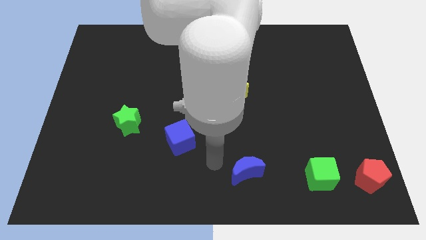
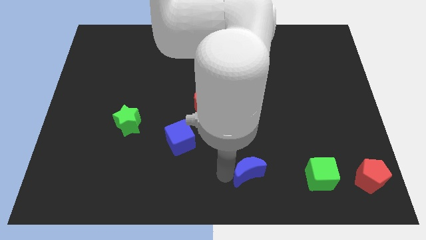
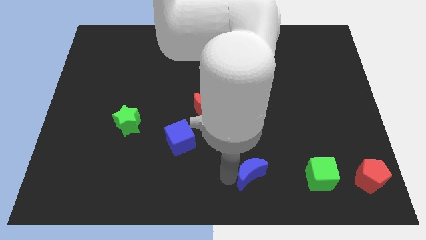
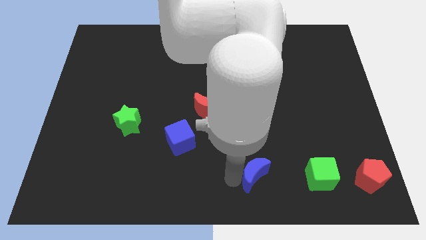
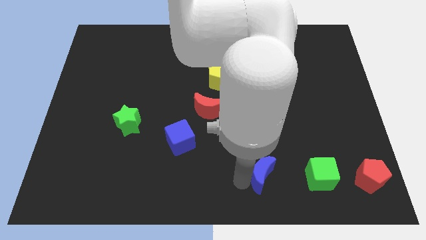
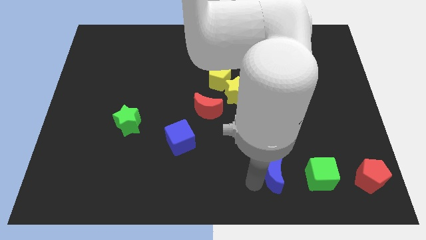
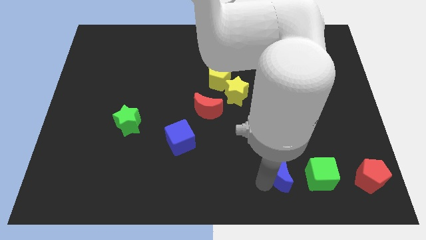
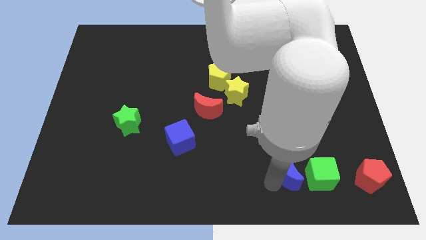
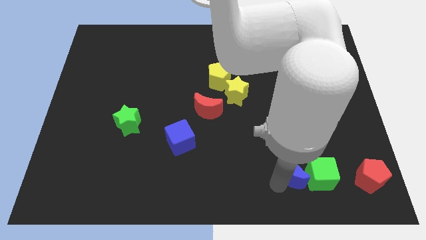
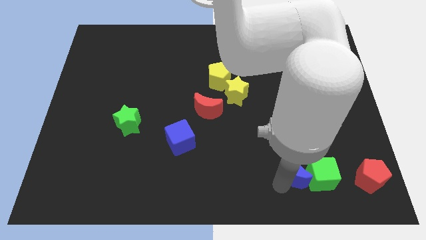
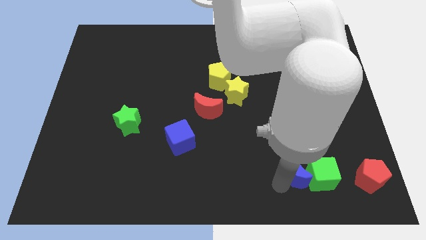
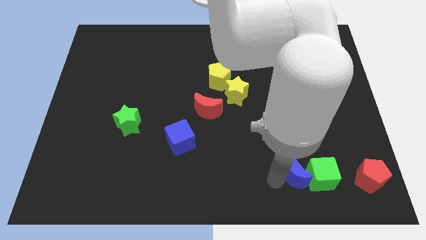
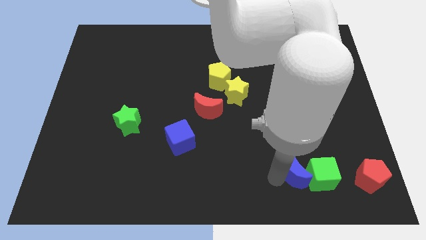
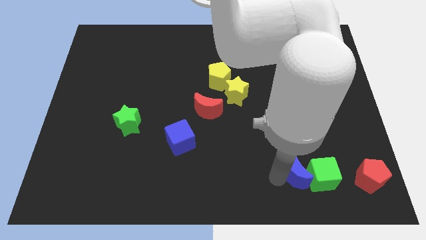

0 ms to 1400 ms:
push the blue moon into the green cube

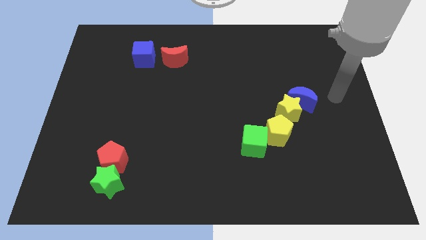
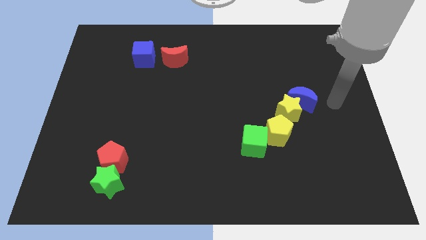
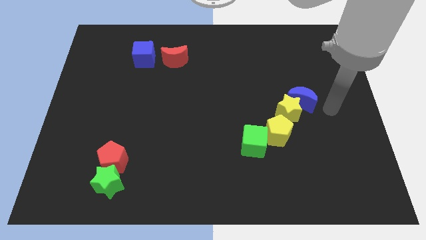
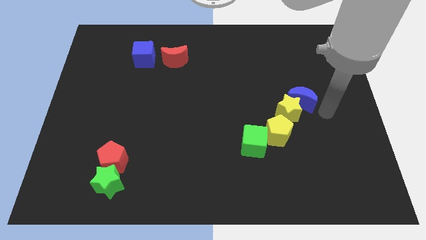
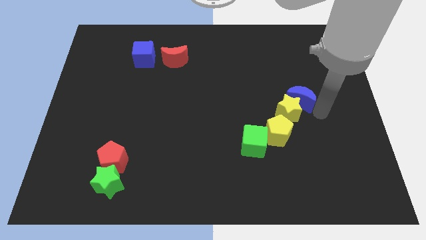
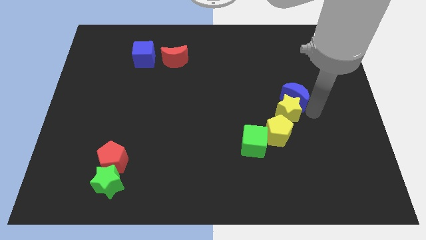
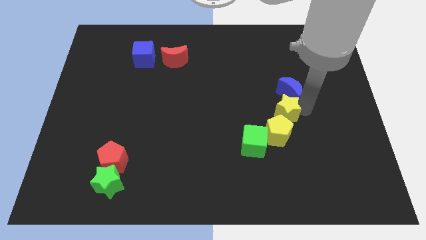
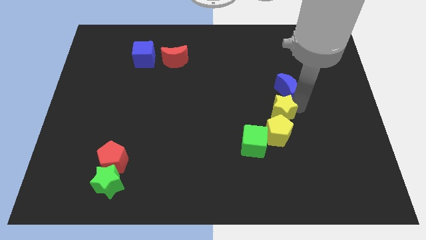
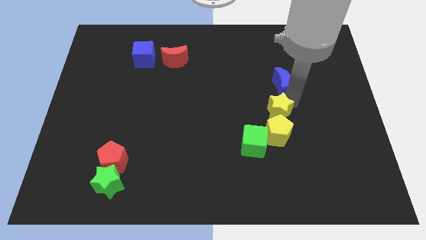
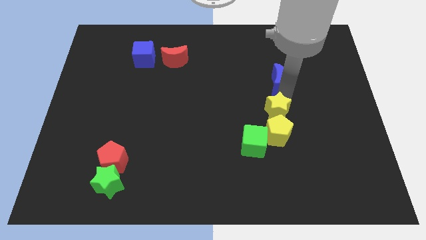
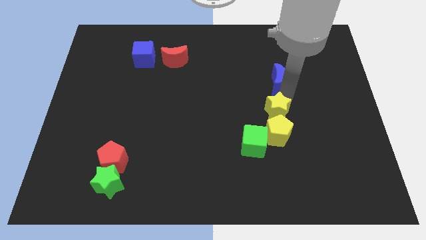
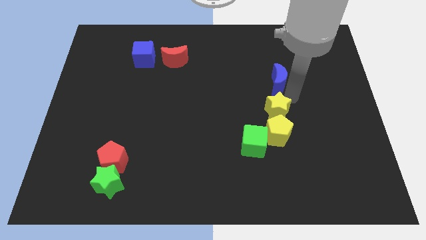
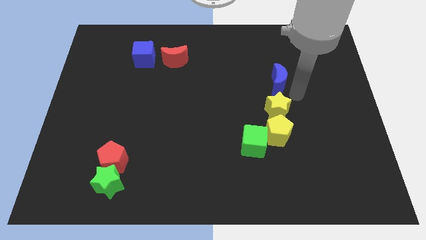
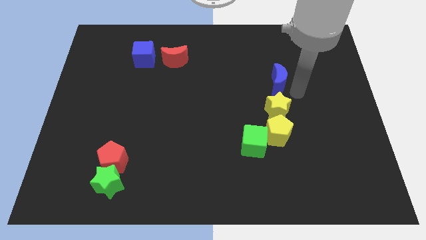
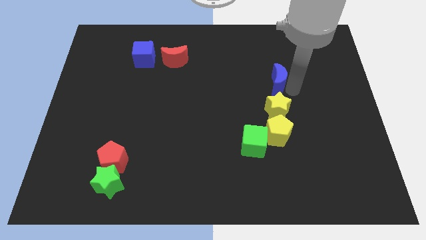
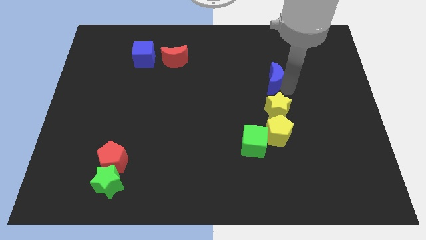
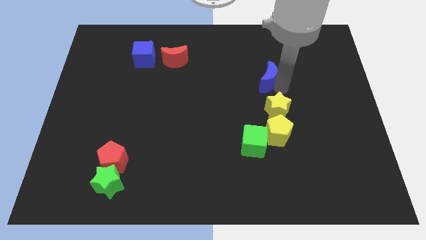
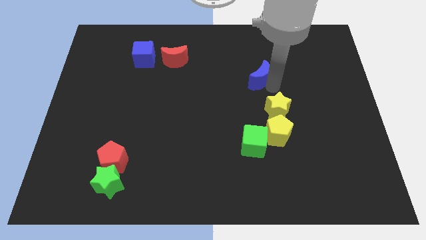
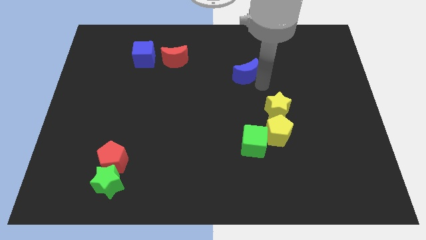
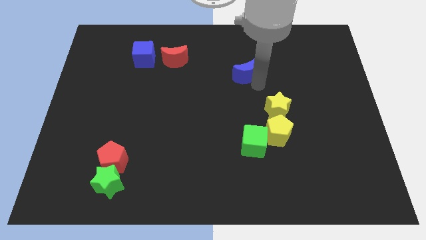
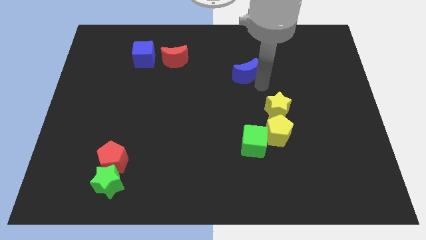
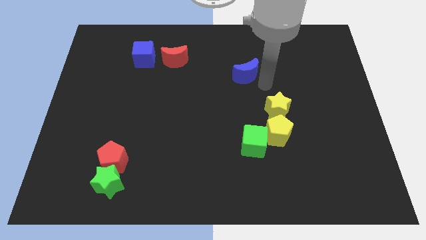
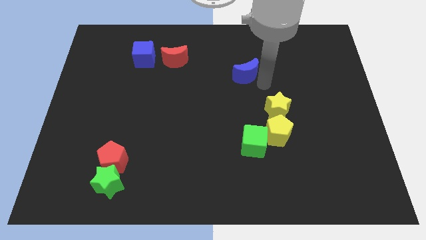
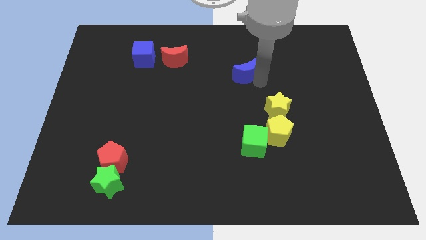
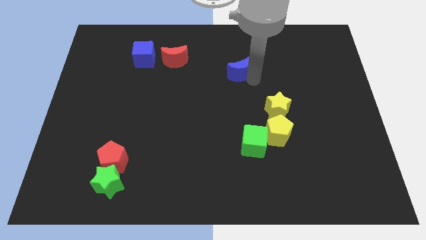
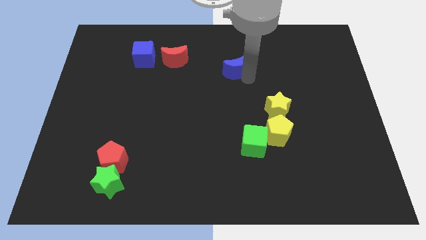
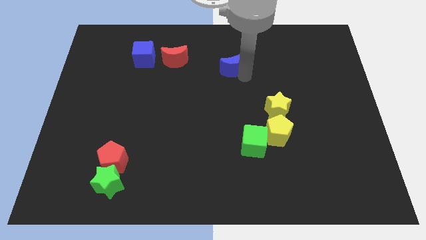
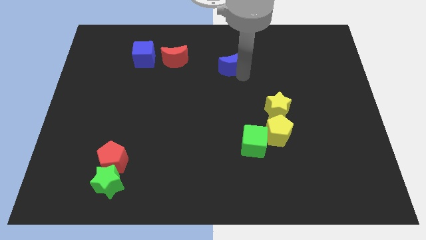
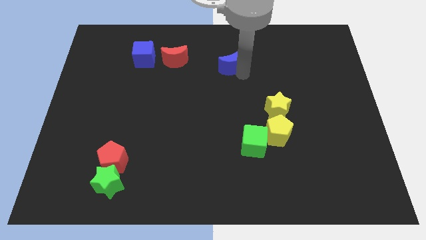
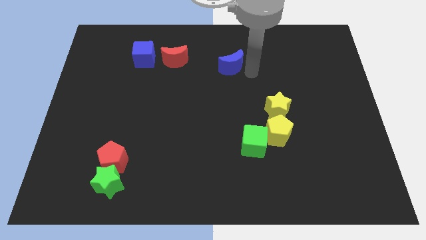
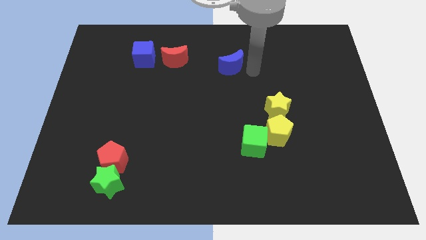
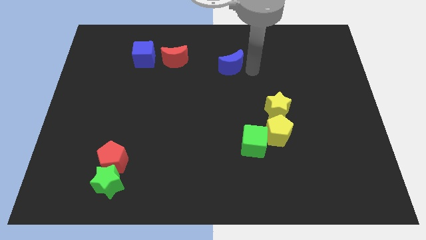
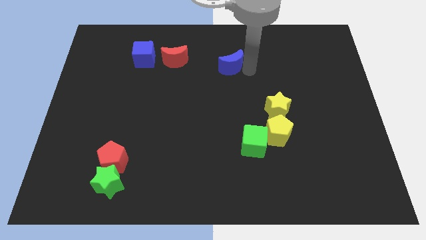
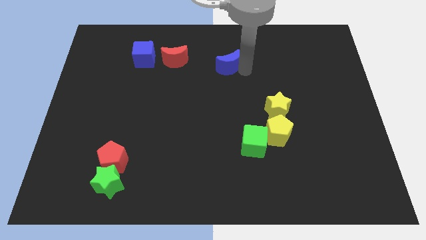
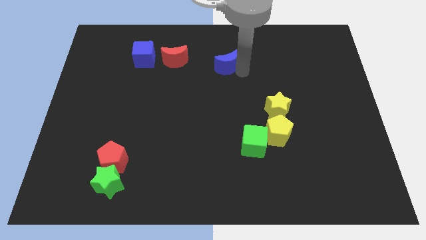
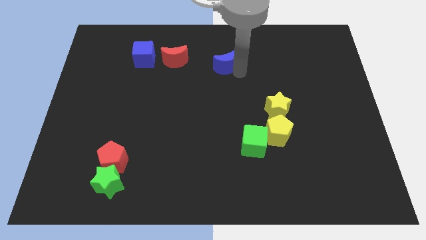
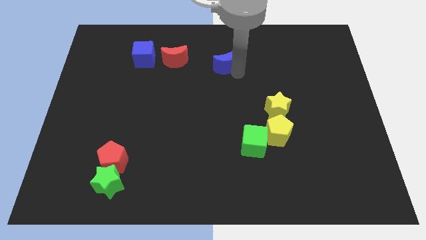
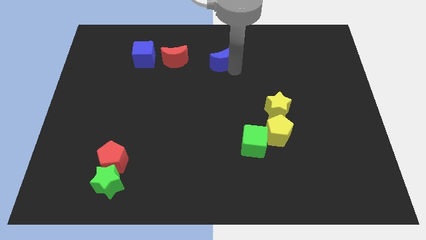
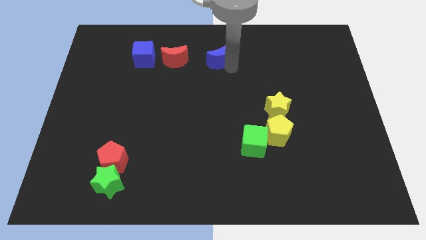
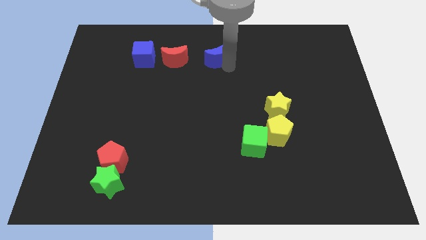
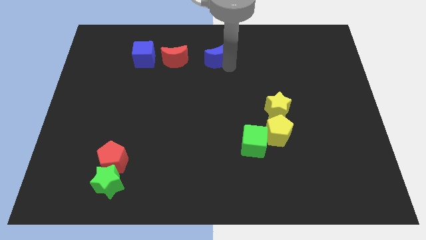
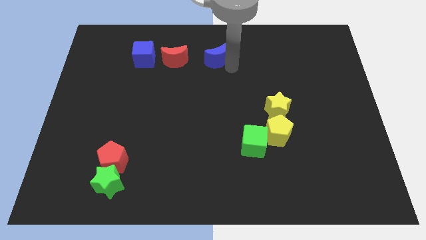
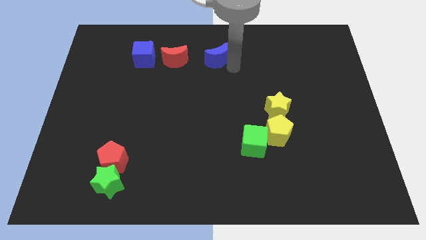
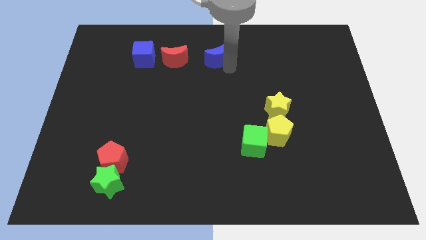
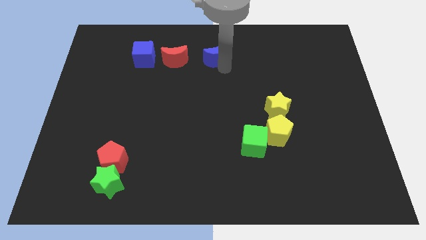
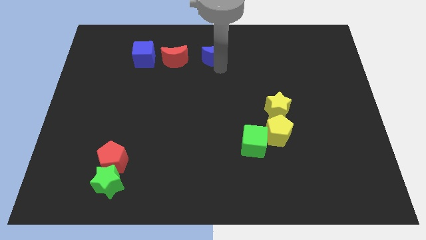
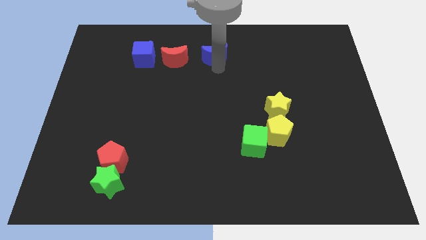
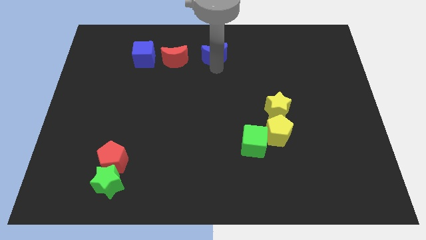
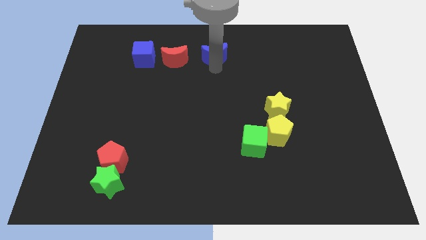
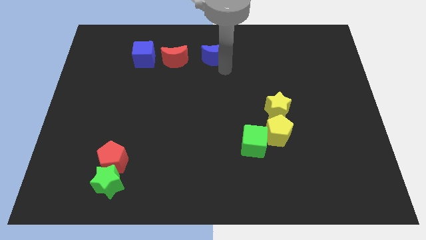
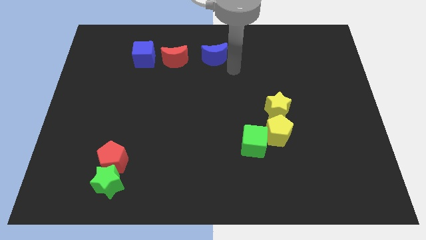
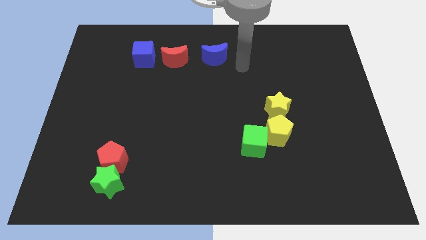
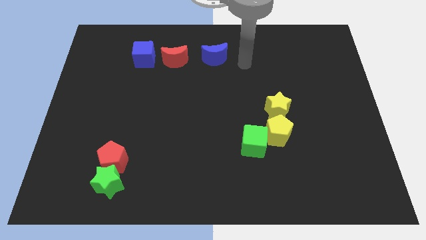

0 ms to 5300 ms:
move the blue crescent to the right of the red crescent

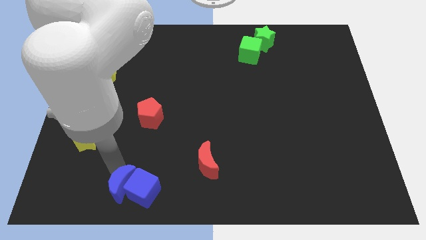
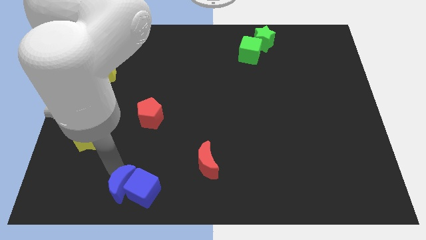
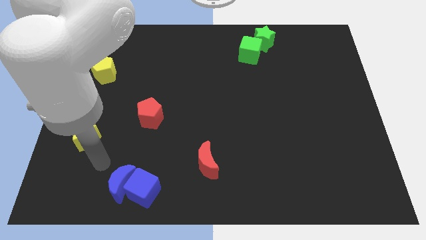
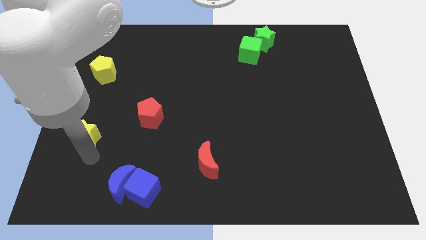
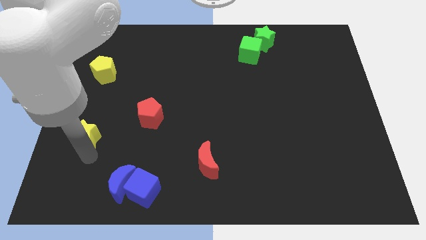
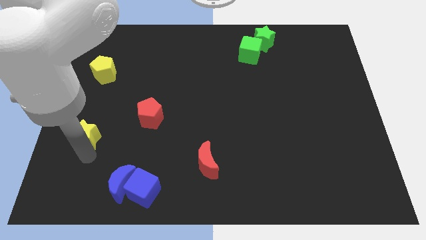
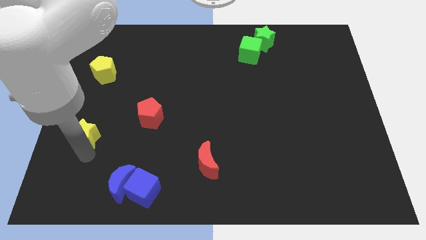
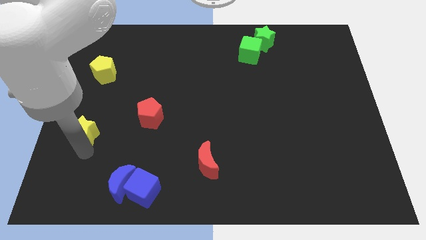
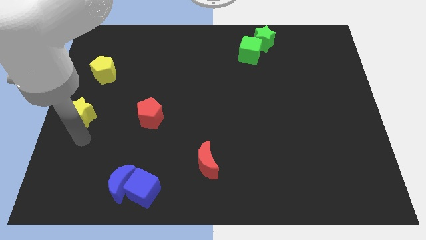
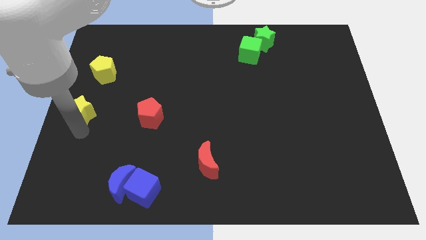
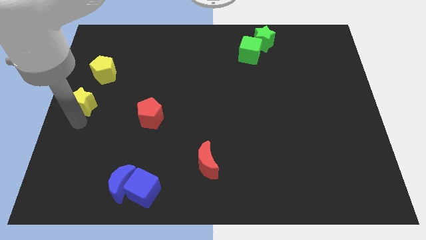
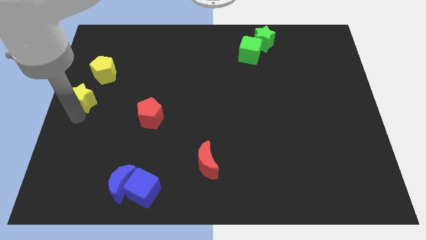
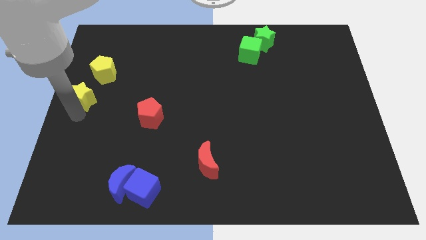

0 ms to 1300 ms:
move the yellow star towards the bottom side of the yellow pentagon

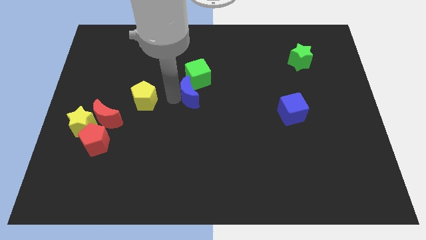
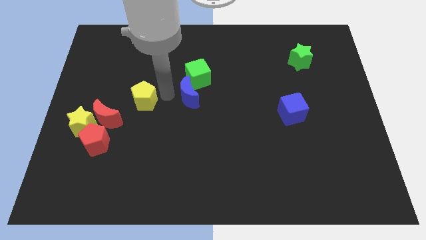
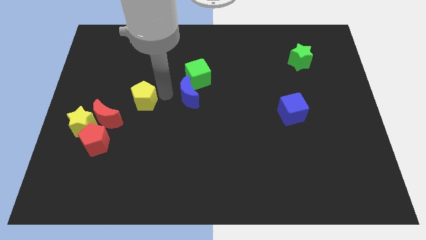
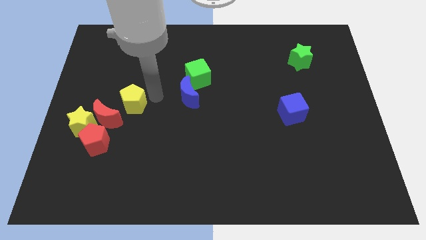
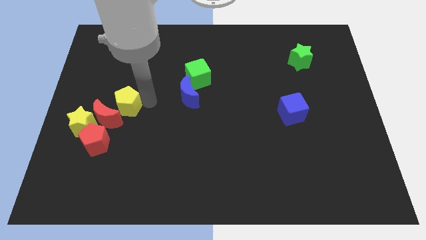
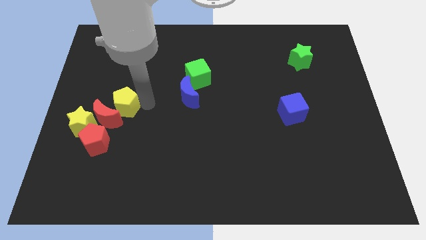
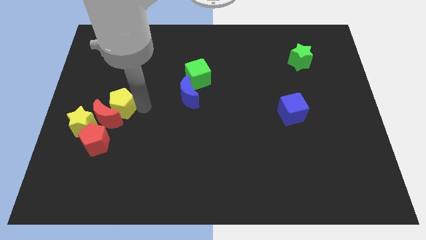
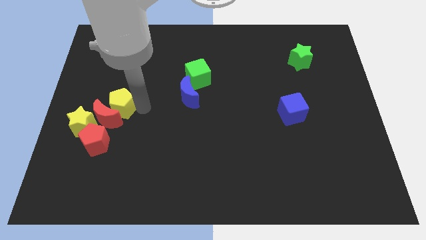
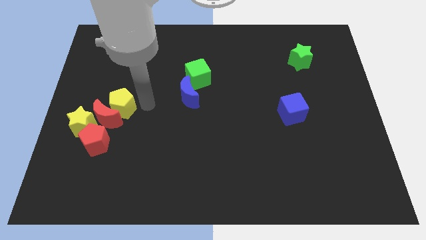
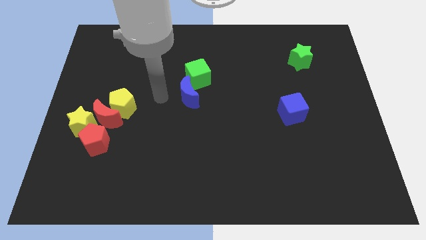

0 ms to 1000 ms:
move the yellow pentagon close to the red moon
